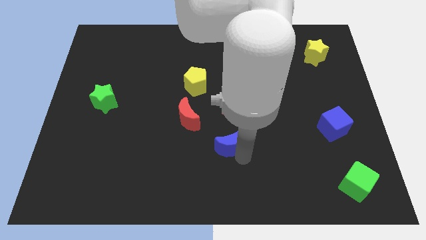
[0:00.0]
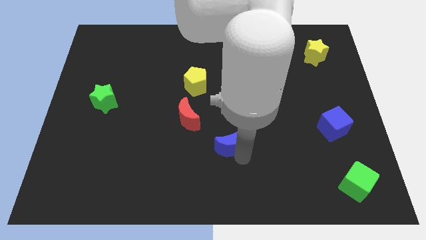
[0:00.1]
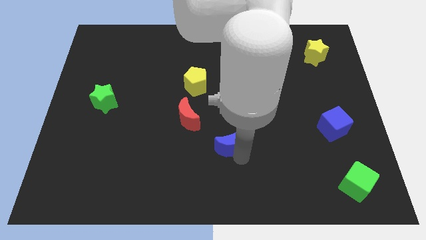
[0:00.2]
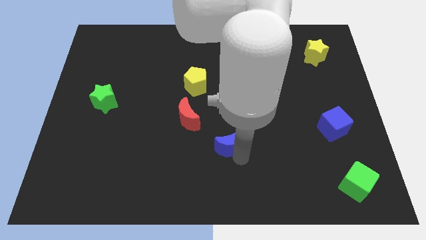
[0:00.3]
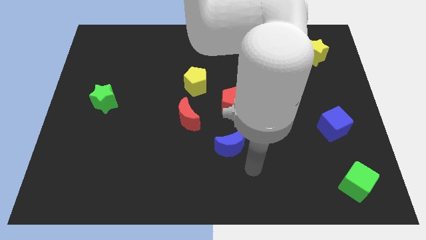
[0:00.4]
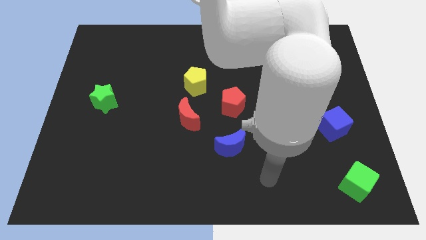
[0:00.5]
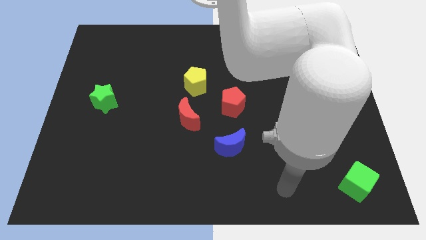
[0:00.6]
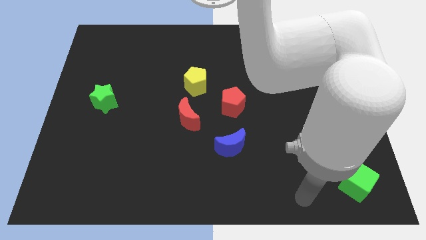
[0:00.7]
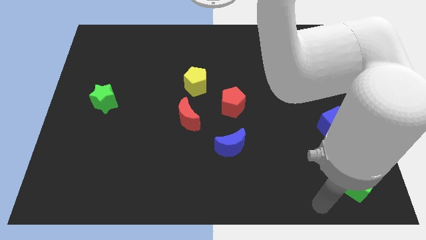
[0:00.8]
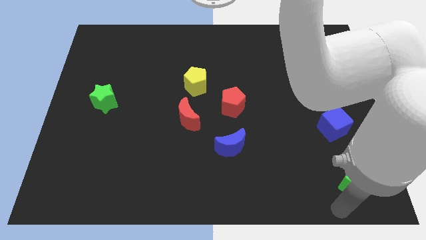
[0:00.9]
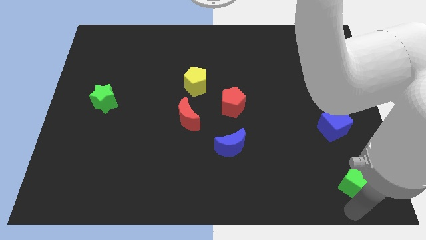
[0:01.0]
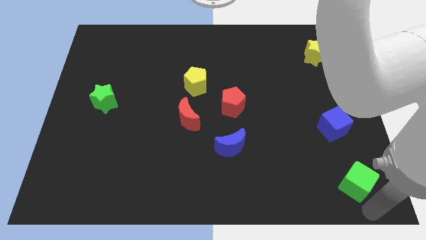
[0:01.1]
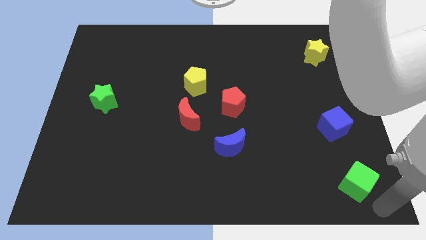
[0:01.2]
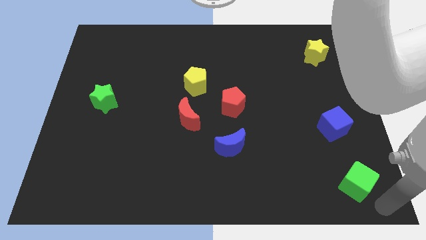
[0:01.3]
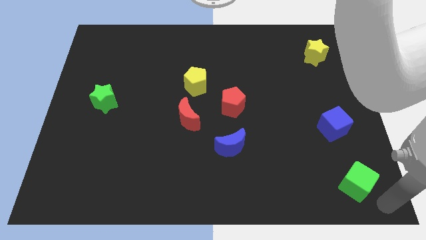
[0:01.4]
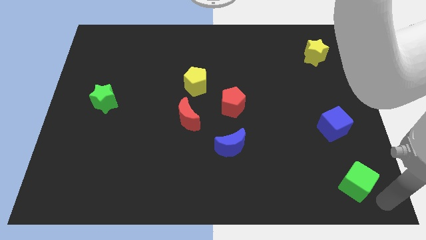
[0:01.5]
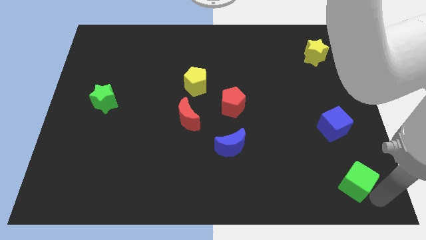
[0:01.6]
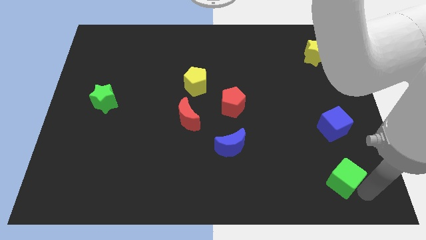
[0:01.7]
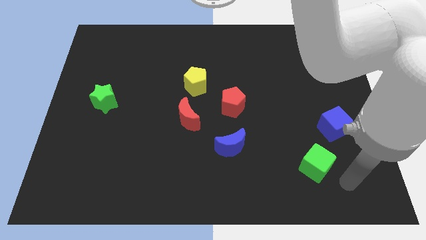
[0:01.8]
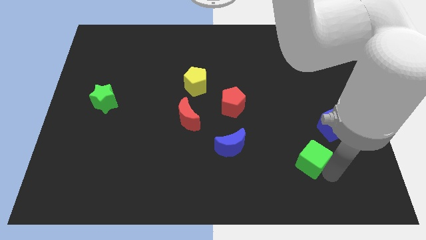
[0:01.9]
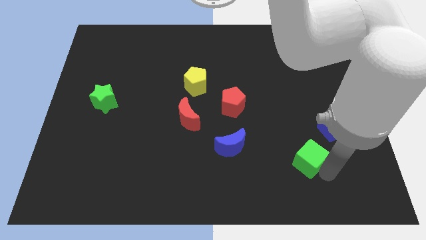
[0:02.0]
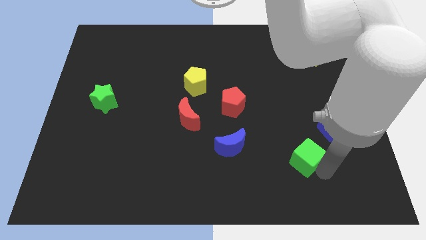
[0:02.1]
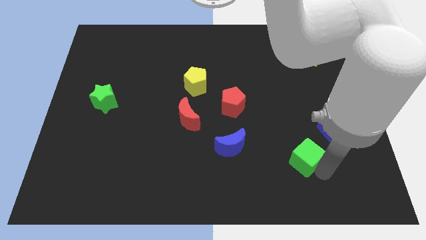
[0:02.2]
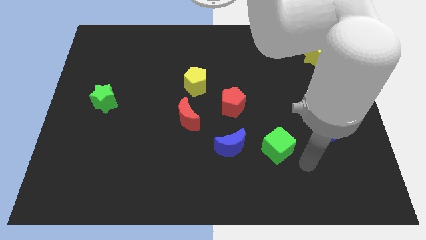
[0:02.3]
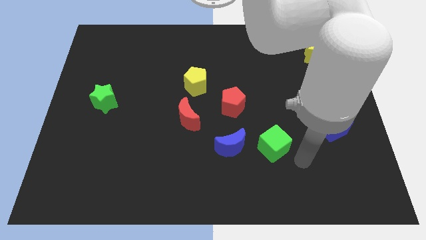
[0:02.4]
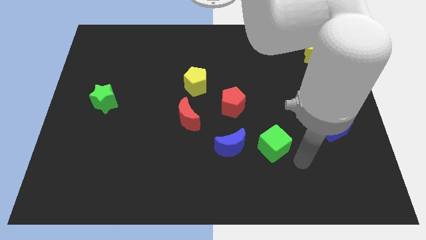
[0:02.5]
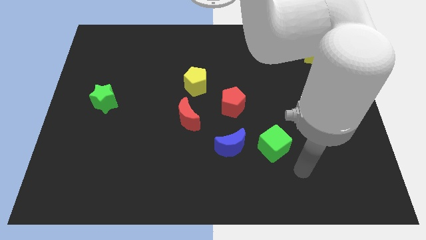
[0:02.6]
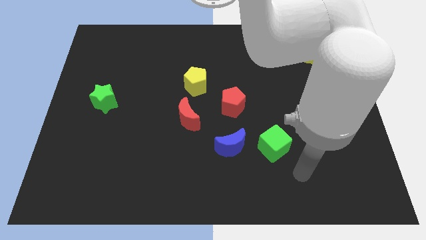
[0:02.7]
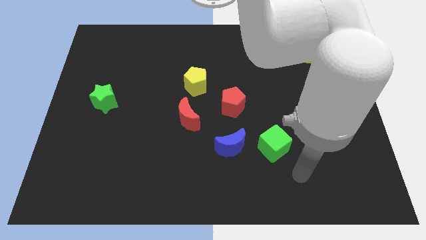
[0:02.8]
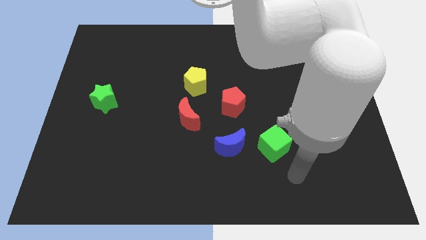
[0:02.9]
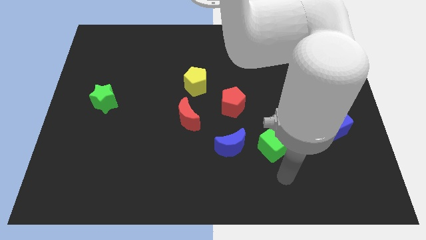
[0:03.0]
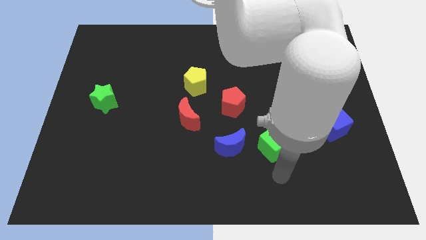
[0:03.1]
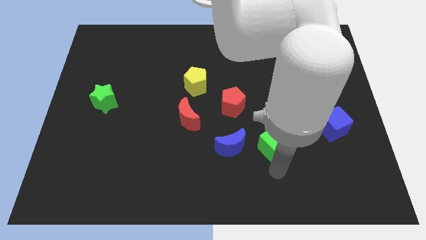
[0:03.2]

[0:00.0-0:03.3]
push the green cube towards the center

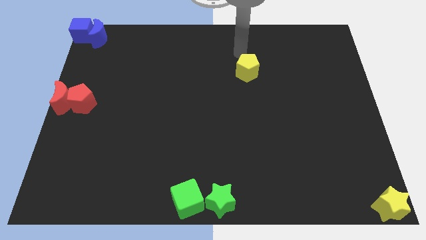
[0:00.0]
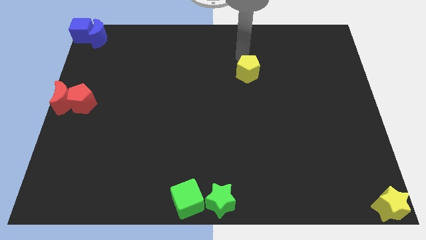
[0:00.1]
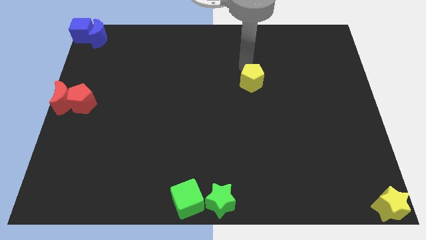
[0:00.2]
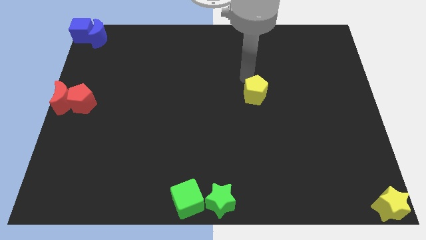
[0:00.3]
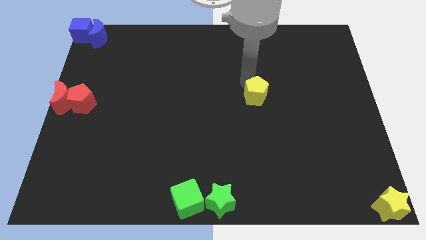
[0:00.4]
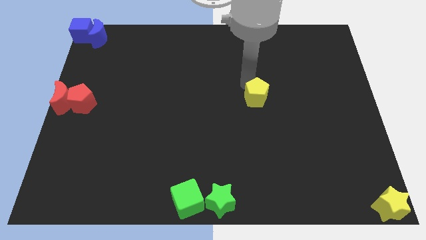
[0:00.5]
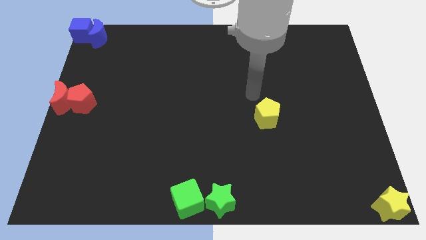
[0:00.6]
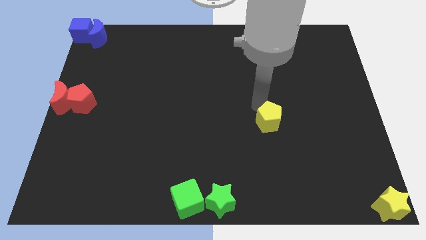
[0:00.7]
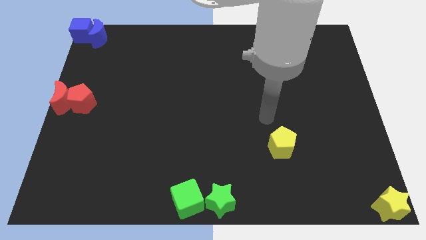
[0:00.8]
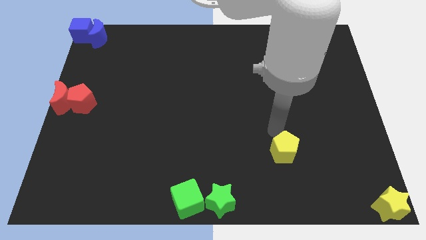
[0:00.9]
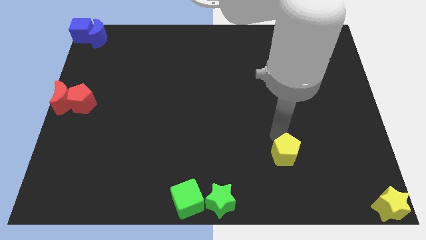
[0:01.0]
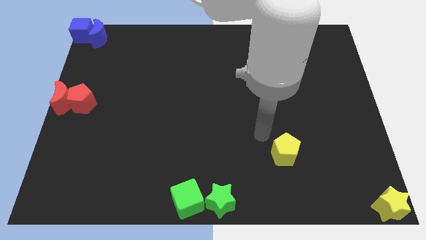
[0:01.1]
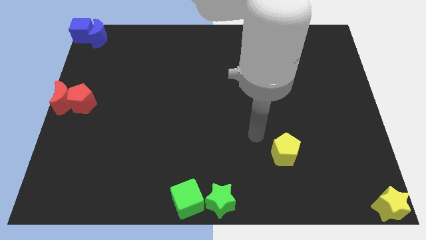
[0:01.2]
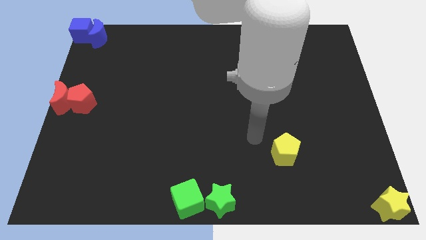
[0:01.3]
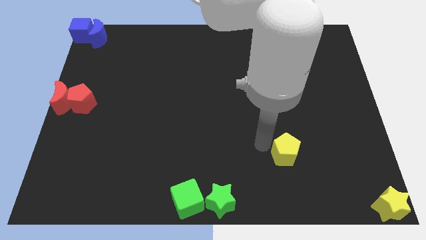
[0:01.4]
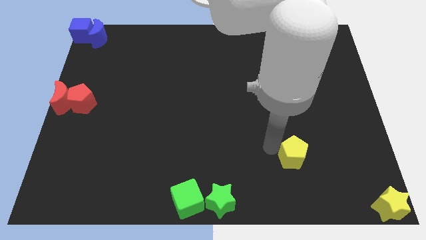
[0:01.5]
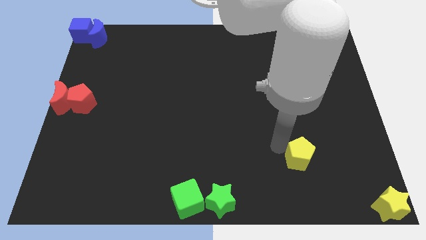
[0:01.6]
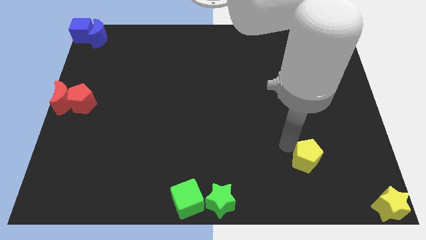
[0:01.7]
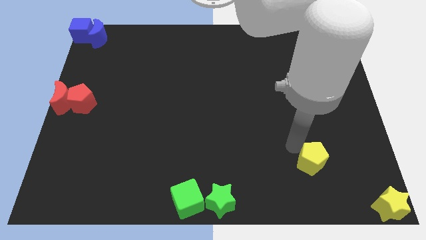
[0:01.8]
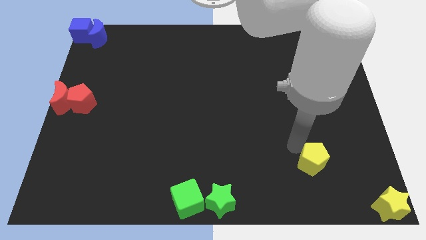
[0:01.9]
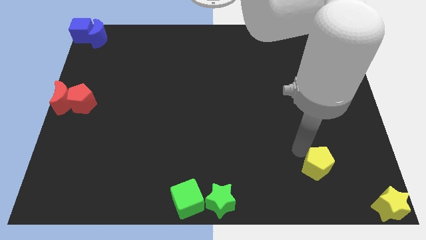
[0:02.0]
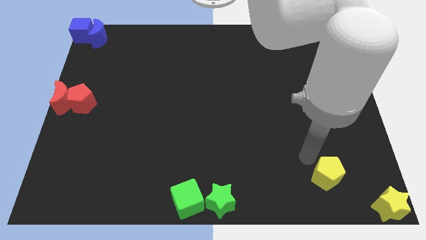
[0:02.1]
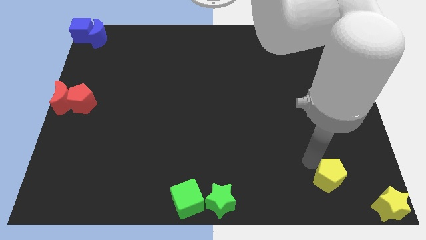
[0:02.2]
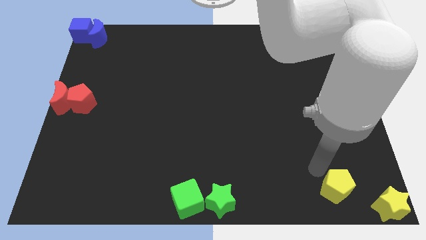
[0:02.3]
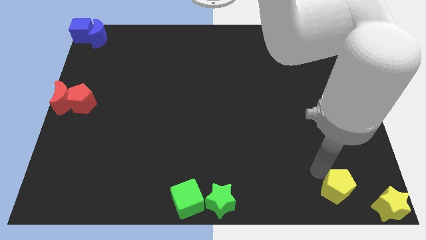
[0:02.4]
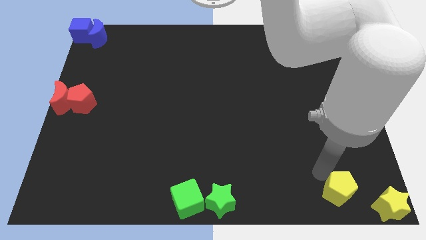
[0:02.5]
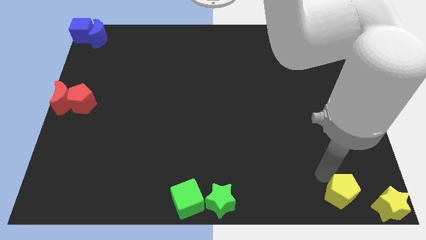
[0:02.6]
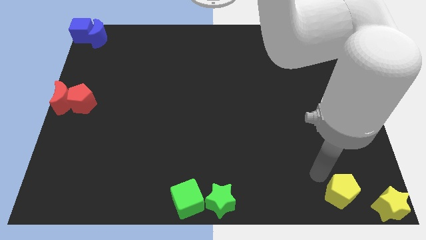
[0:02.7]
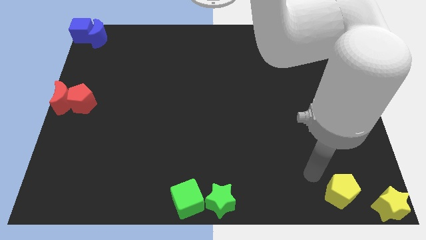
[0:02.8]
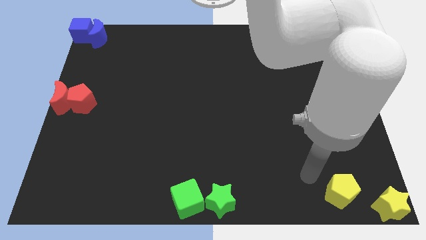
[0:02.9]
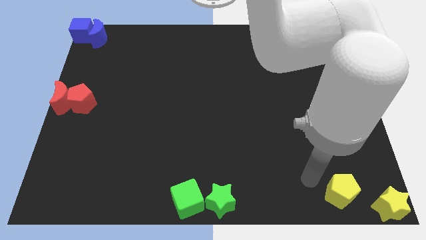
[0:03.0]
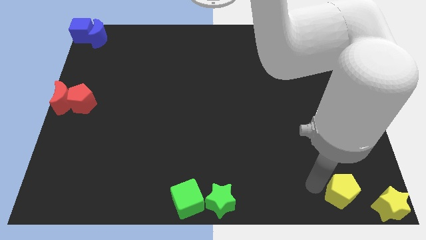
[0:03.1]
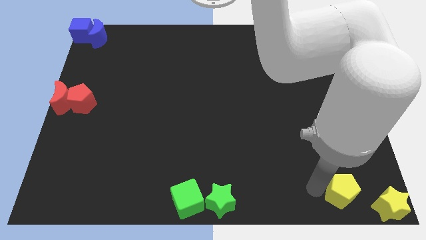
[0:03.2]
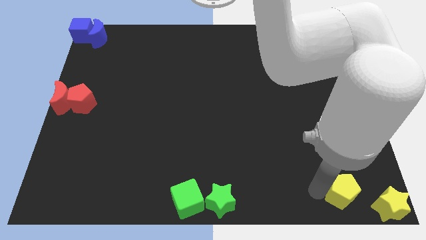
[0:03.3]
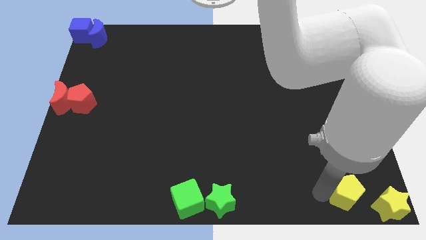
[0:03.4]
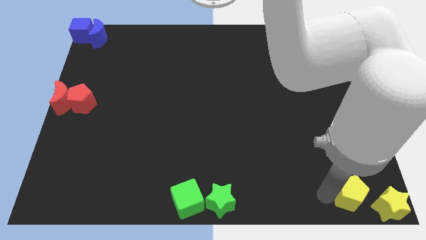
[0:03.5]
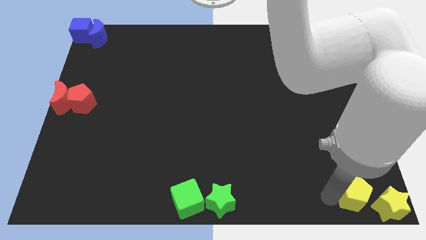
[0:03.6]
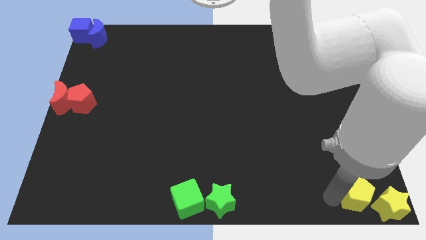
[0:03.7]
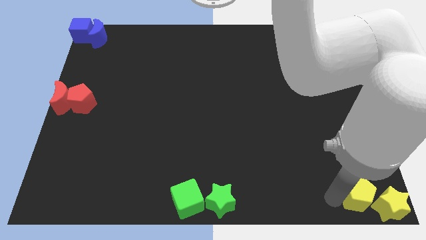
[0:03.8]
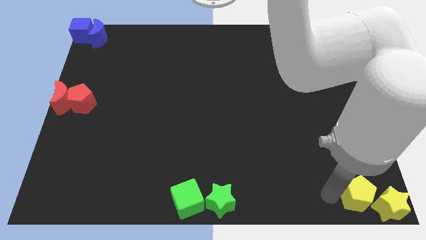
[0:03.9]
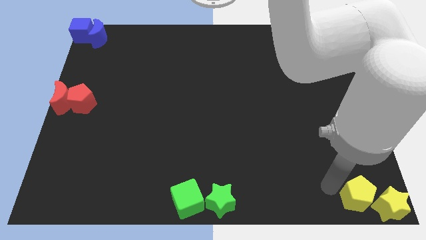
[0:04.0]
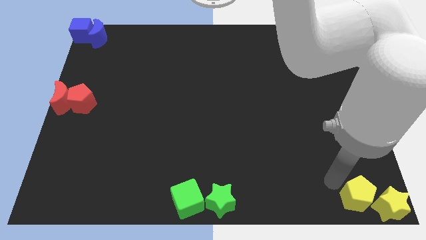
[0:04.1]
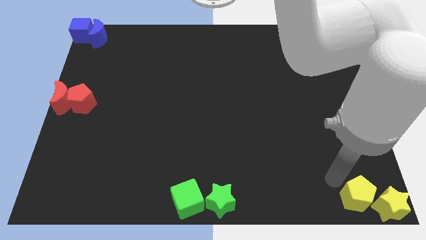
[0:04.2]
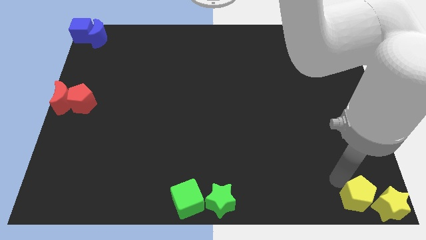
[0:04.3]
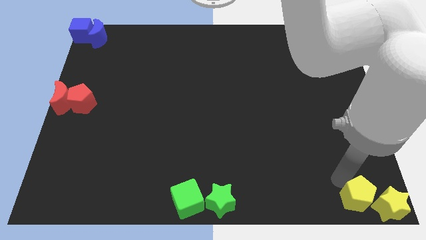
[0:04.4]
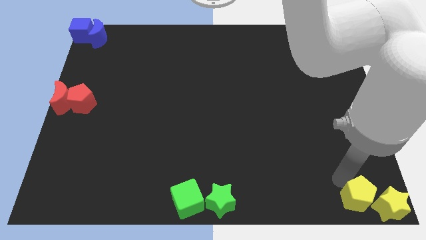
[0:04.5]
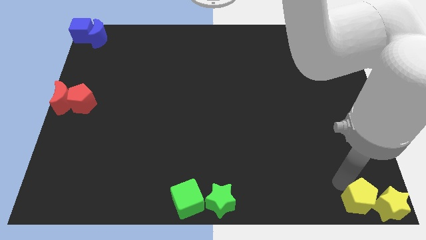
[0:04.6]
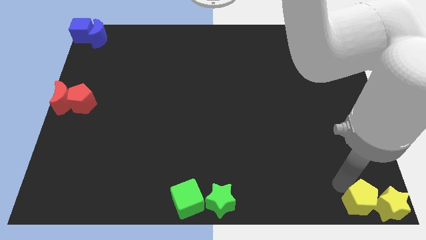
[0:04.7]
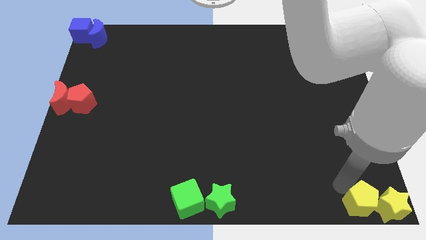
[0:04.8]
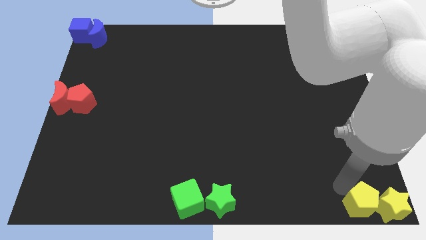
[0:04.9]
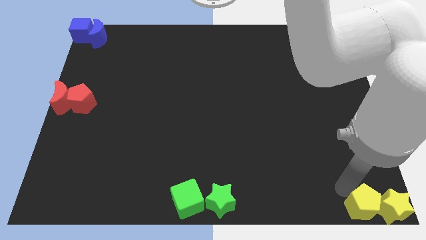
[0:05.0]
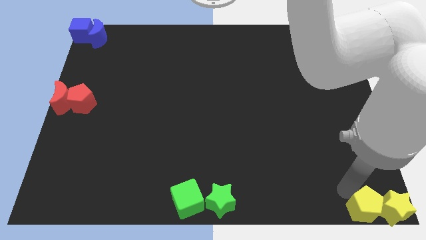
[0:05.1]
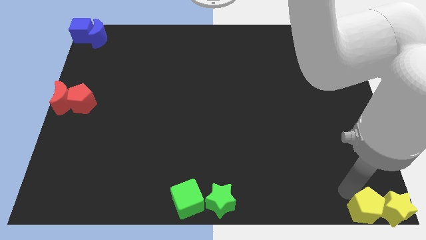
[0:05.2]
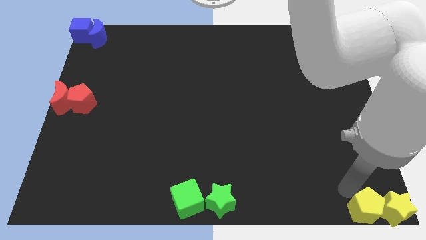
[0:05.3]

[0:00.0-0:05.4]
push the yellow pentagon into the yellow star

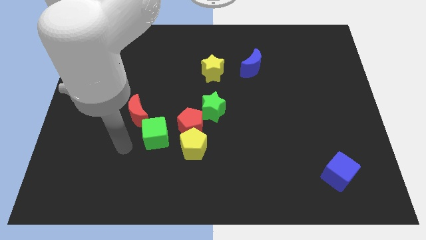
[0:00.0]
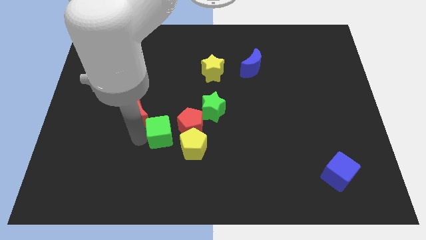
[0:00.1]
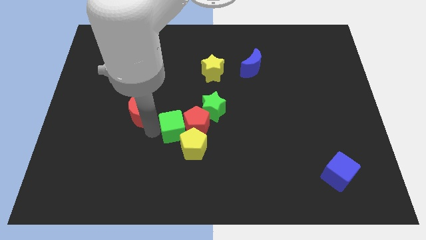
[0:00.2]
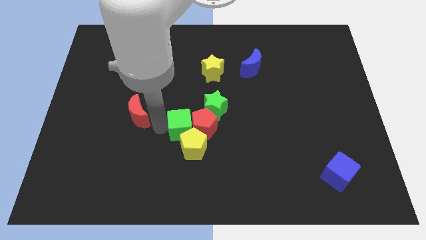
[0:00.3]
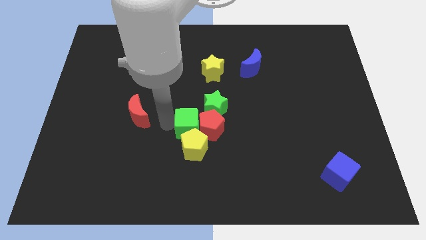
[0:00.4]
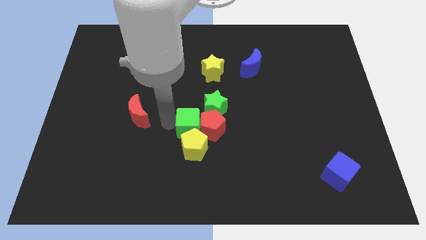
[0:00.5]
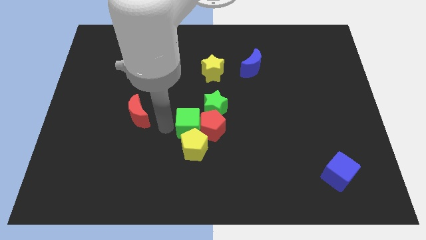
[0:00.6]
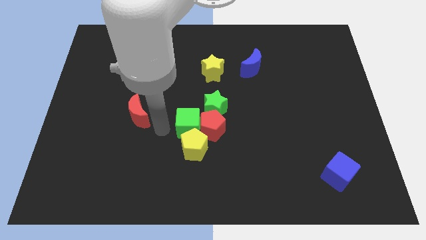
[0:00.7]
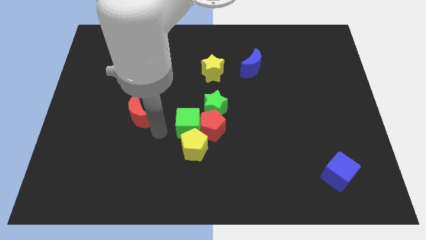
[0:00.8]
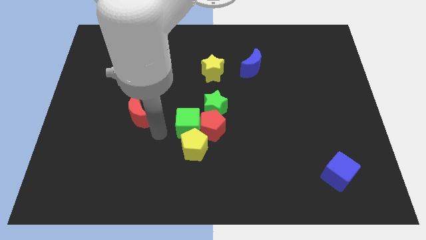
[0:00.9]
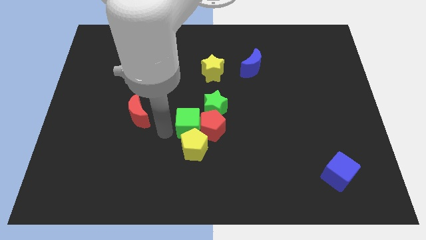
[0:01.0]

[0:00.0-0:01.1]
push green cube near red pentagon
